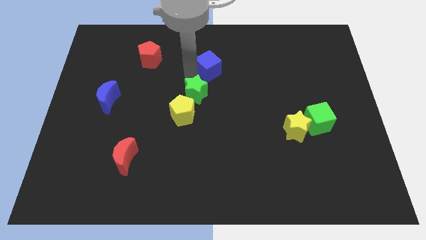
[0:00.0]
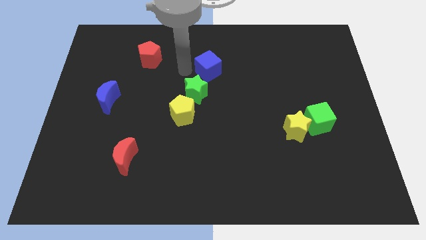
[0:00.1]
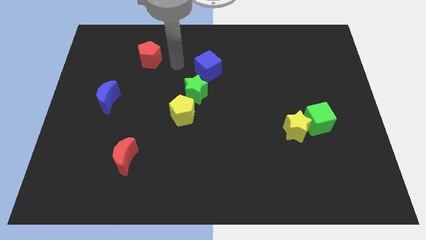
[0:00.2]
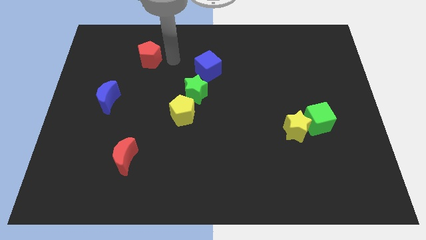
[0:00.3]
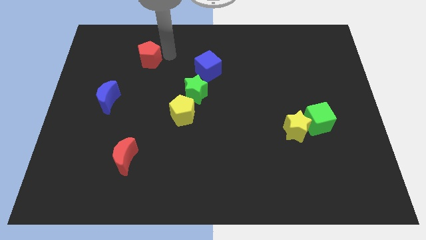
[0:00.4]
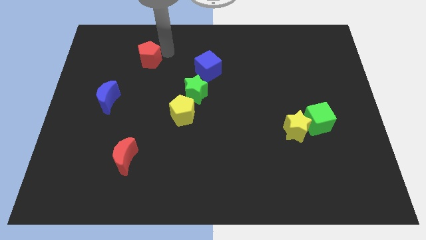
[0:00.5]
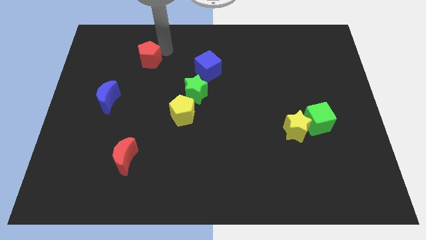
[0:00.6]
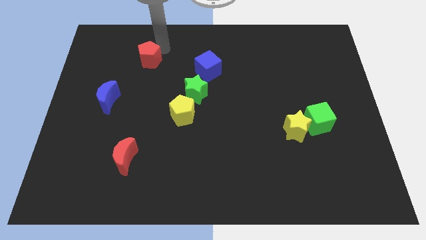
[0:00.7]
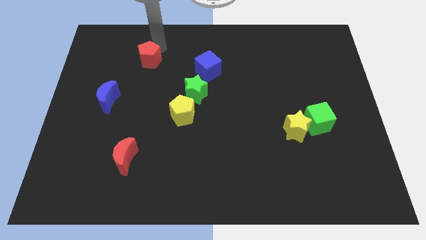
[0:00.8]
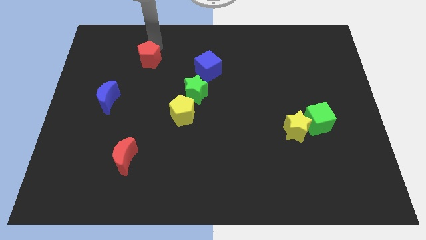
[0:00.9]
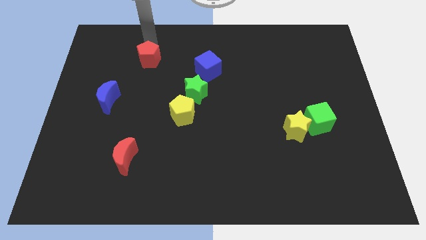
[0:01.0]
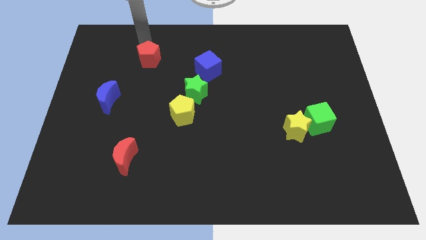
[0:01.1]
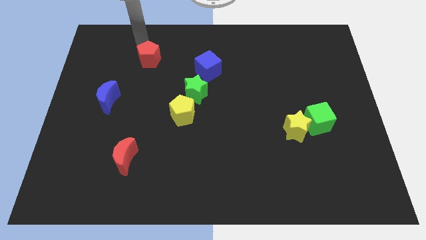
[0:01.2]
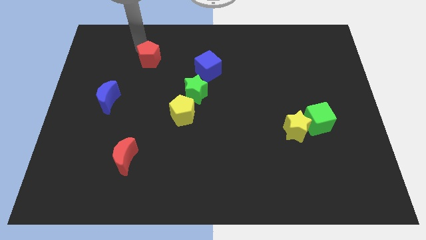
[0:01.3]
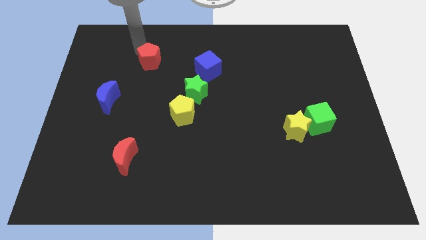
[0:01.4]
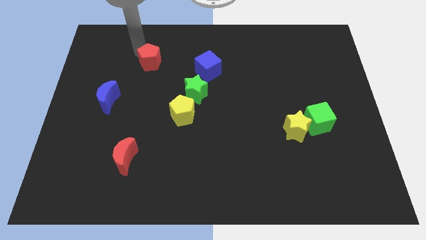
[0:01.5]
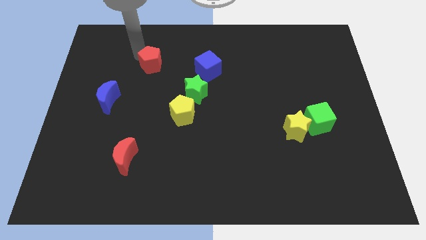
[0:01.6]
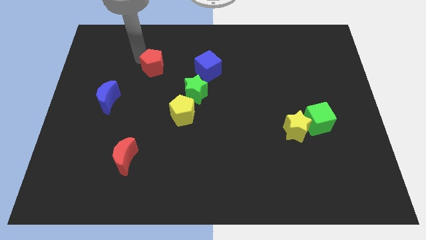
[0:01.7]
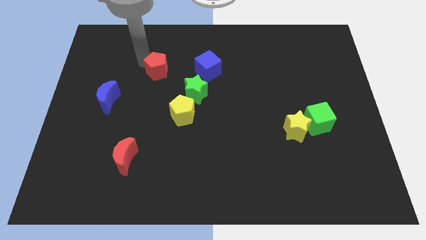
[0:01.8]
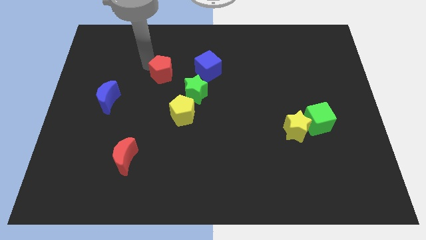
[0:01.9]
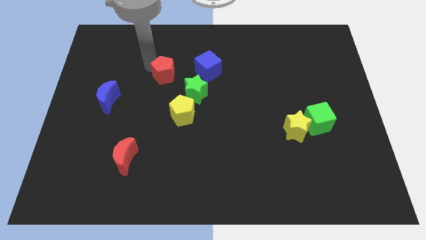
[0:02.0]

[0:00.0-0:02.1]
move the red pentagon slightly towards the top left of the green star

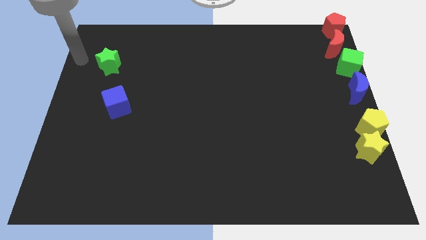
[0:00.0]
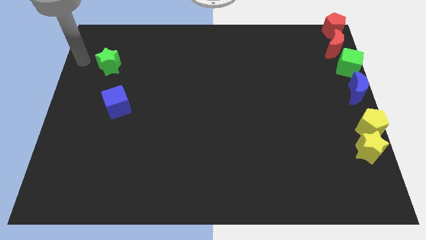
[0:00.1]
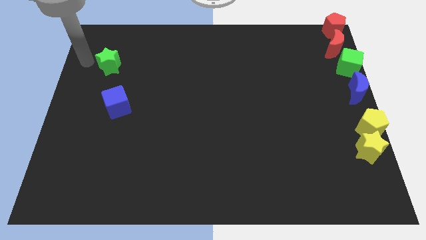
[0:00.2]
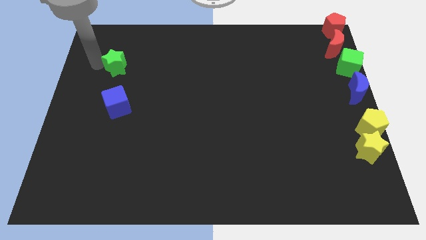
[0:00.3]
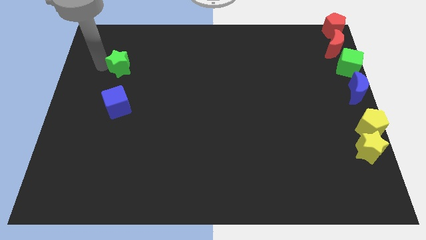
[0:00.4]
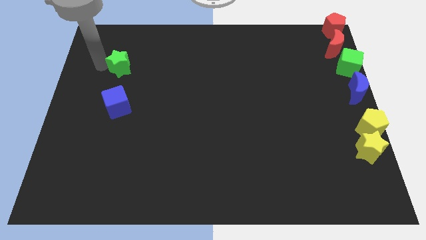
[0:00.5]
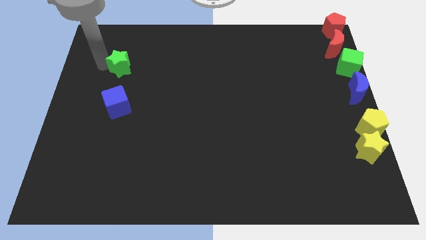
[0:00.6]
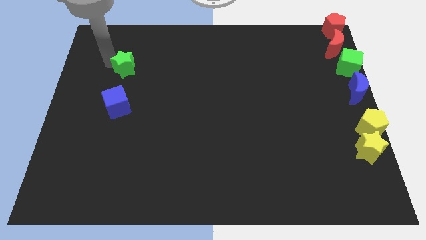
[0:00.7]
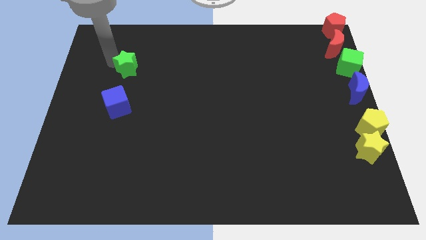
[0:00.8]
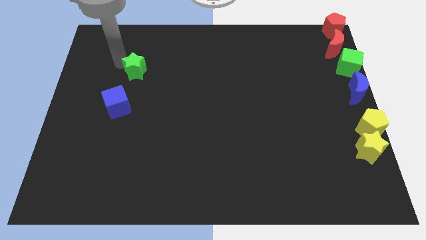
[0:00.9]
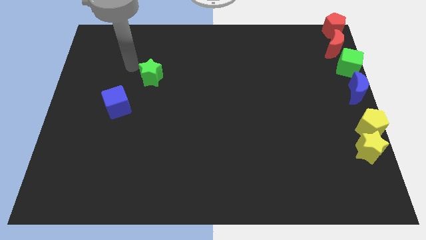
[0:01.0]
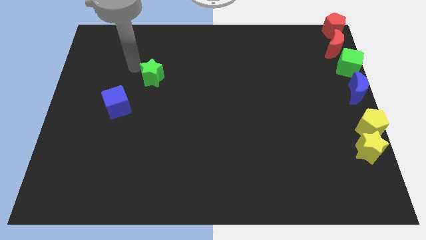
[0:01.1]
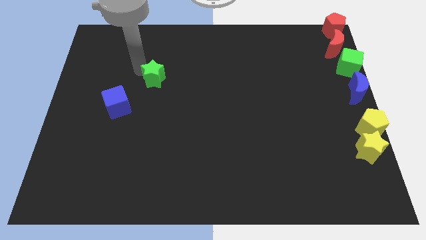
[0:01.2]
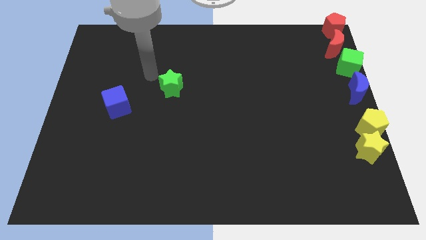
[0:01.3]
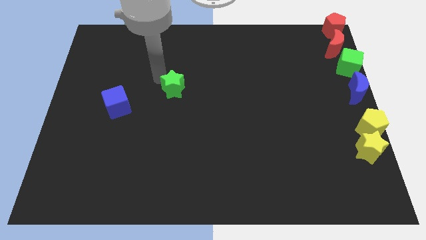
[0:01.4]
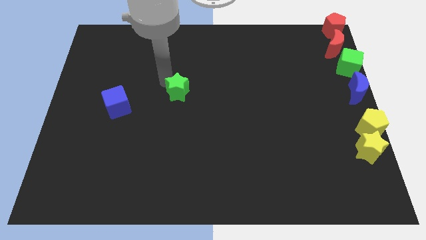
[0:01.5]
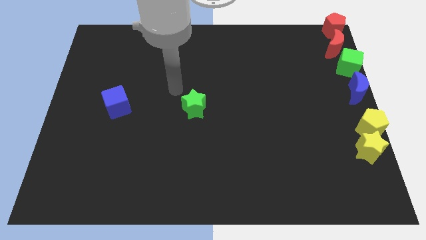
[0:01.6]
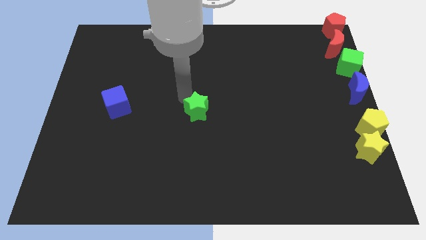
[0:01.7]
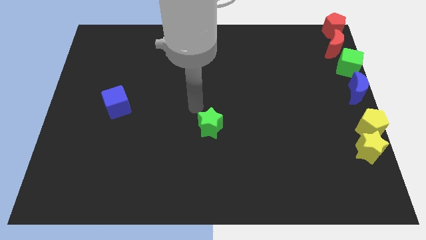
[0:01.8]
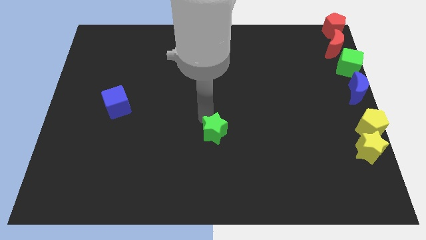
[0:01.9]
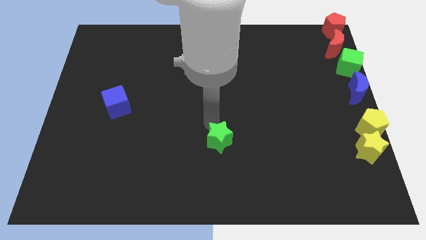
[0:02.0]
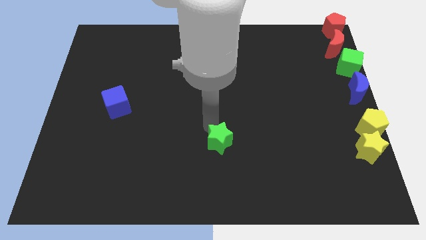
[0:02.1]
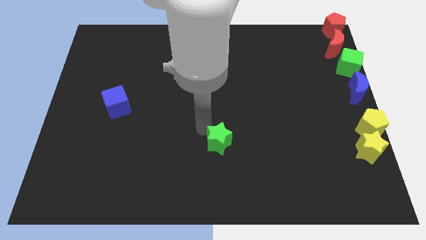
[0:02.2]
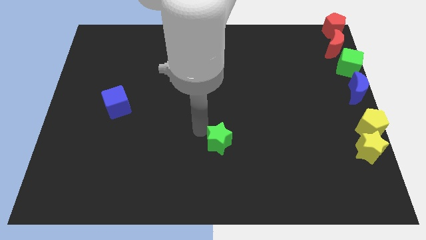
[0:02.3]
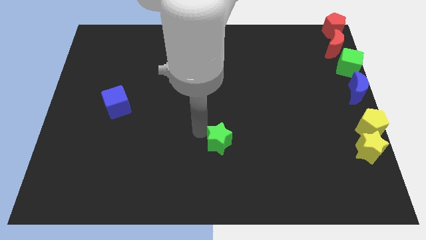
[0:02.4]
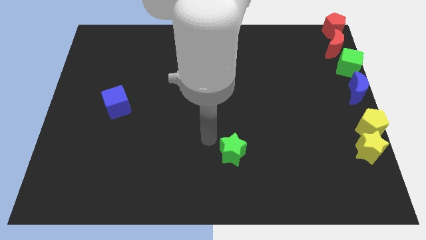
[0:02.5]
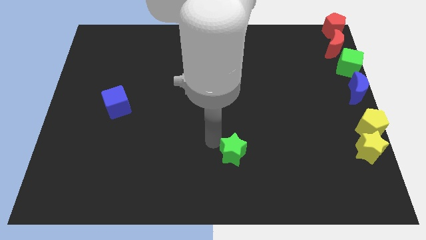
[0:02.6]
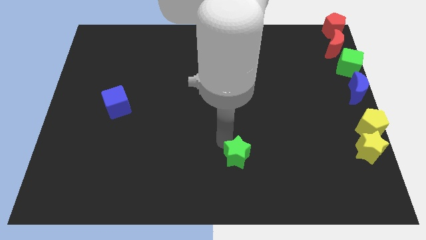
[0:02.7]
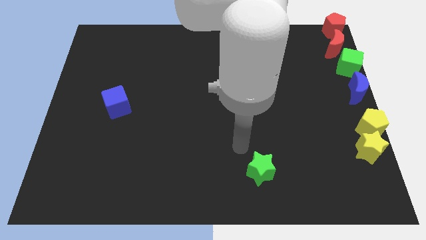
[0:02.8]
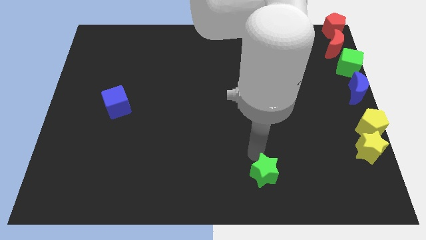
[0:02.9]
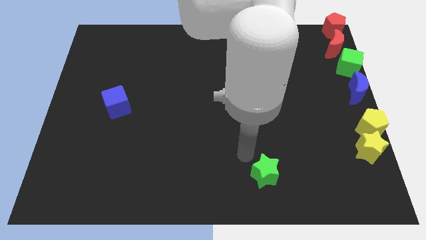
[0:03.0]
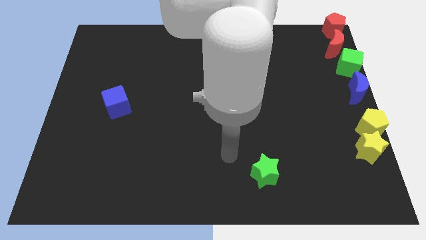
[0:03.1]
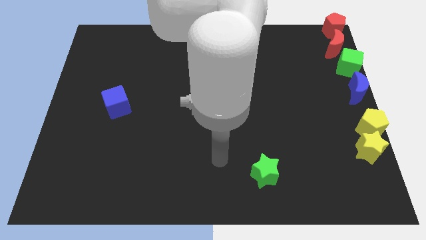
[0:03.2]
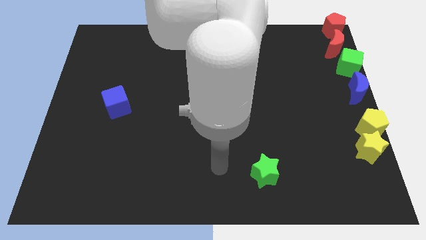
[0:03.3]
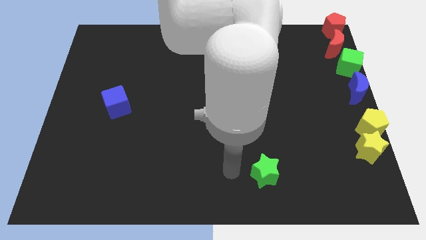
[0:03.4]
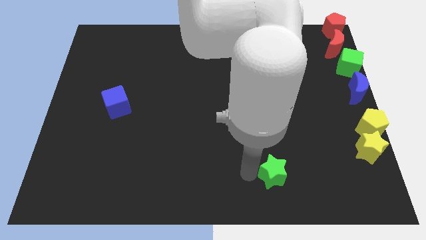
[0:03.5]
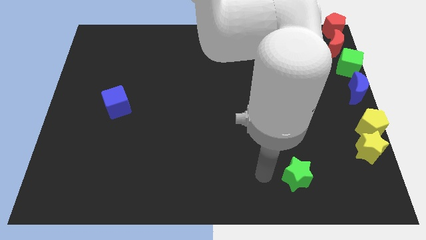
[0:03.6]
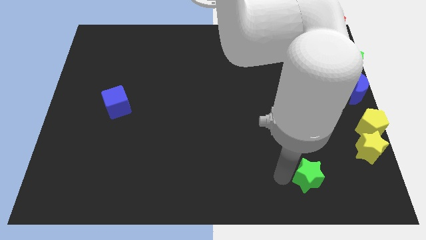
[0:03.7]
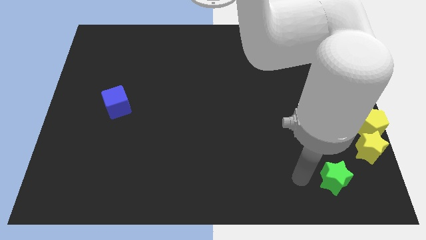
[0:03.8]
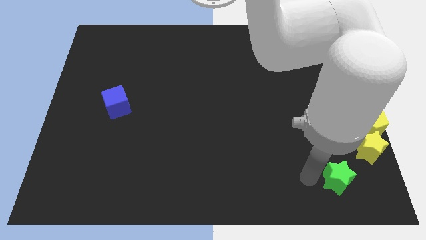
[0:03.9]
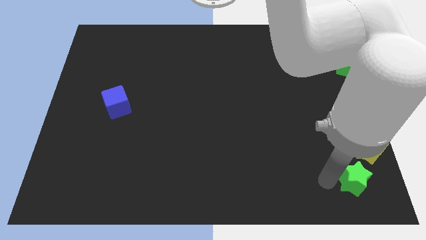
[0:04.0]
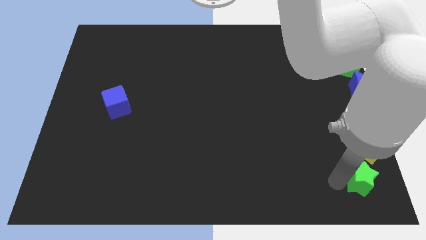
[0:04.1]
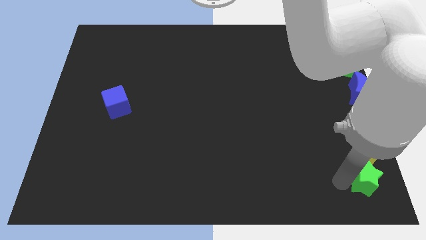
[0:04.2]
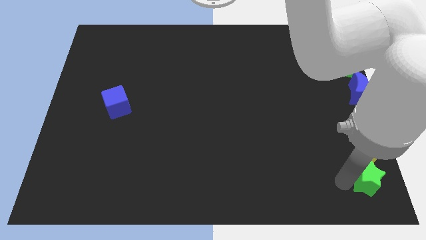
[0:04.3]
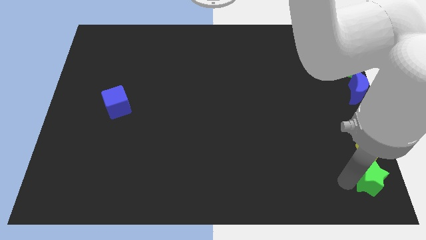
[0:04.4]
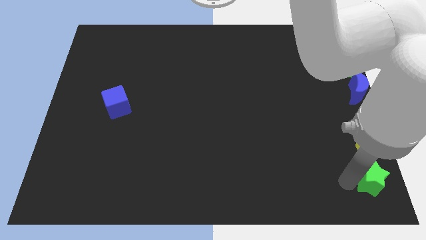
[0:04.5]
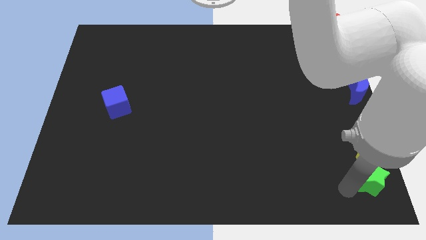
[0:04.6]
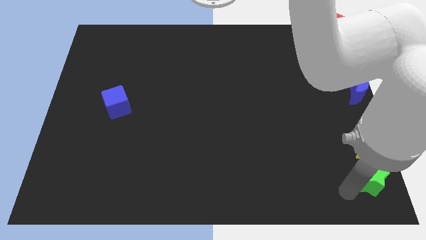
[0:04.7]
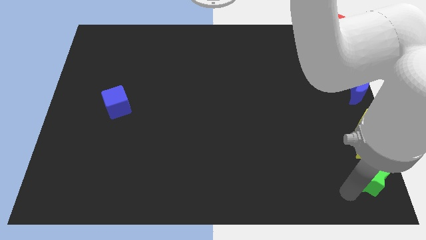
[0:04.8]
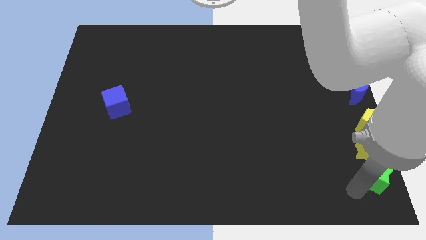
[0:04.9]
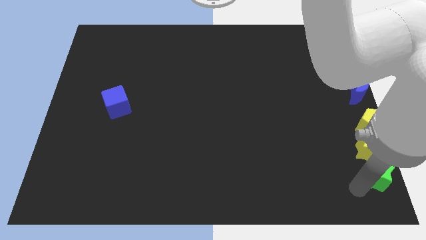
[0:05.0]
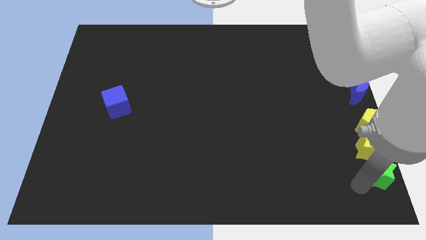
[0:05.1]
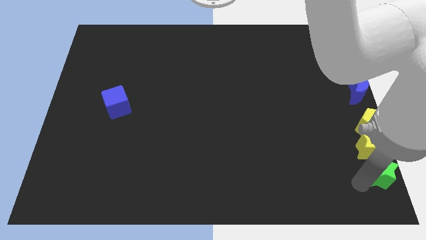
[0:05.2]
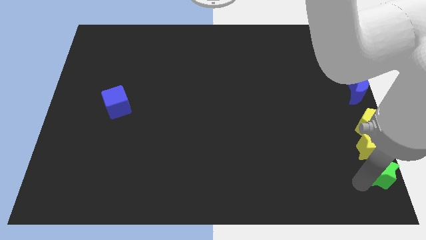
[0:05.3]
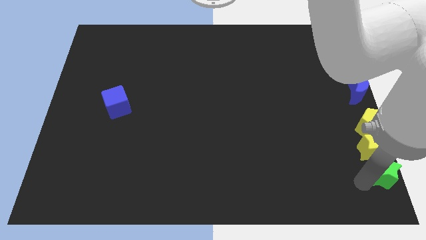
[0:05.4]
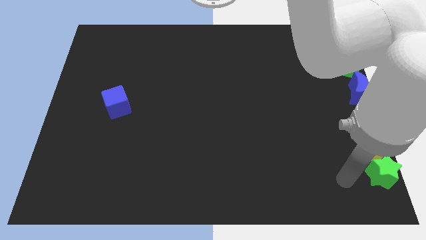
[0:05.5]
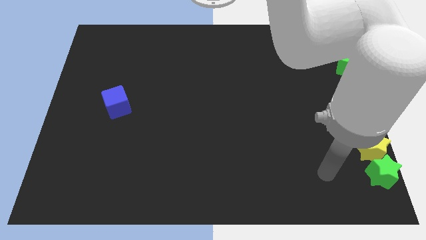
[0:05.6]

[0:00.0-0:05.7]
move the green star below the yellow star

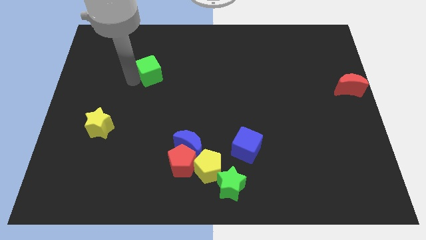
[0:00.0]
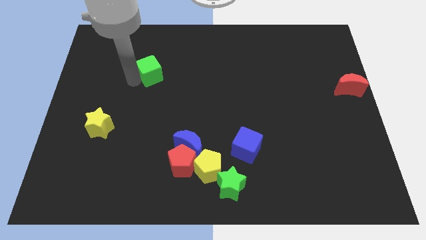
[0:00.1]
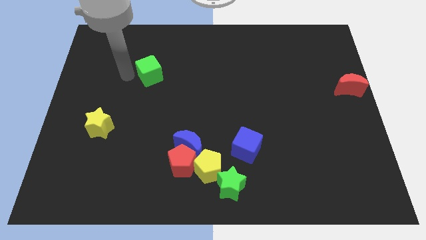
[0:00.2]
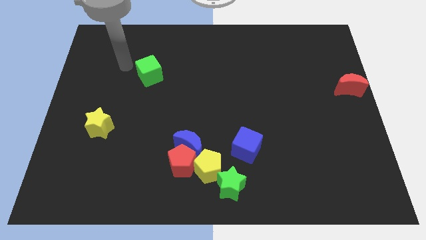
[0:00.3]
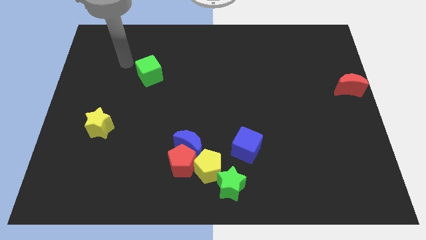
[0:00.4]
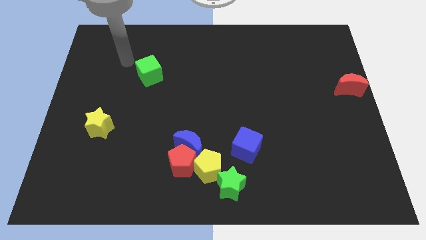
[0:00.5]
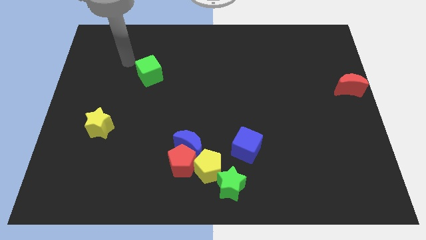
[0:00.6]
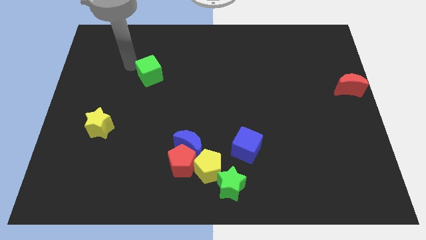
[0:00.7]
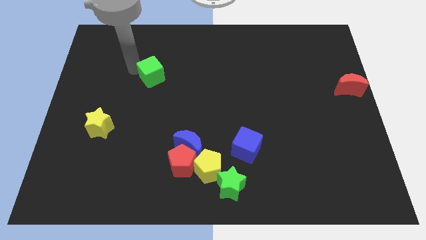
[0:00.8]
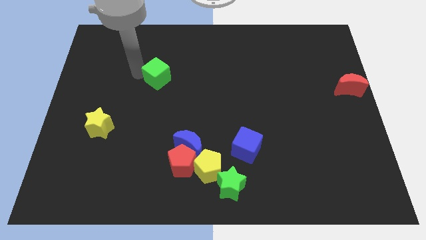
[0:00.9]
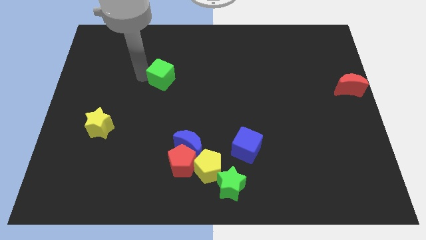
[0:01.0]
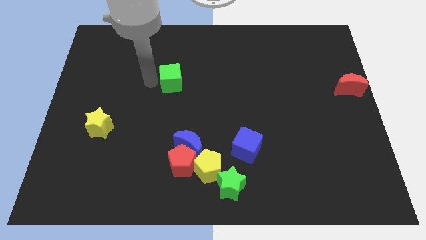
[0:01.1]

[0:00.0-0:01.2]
move the green cube to the center
